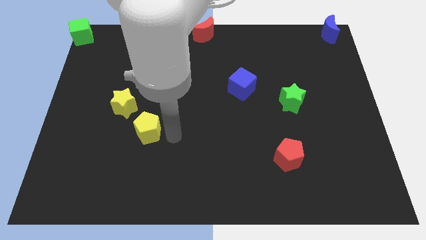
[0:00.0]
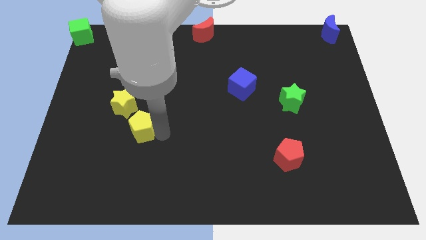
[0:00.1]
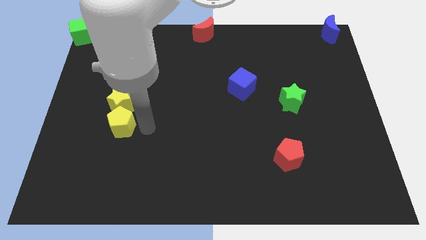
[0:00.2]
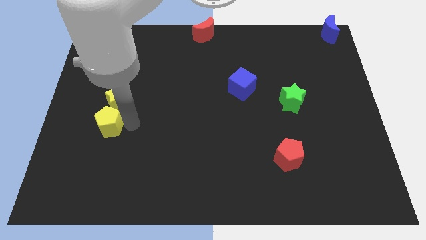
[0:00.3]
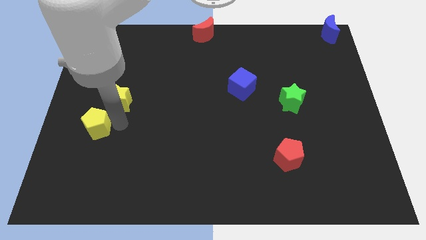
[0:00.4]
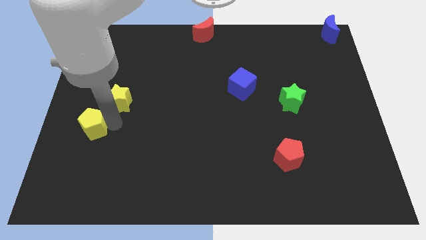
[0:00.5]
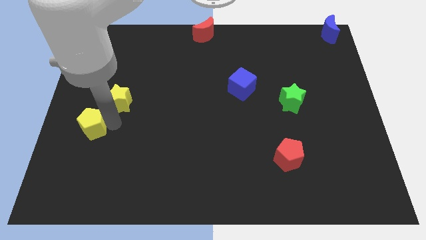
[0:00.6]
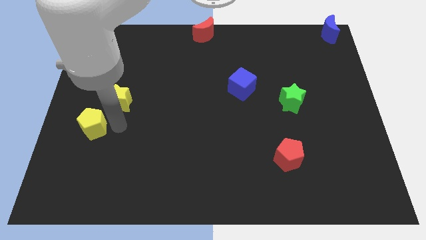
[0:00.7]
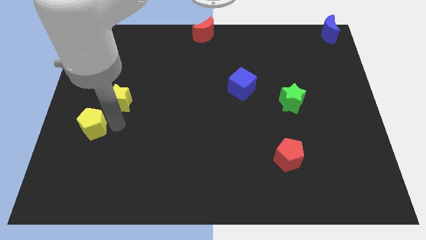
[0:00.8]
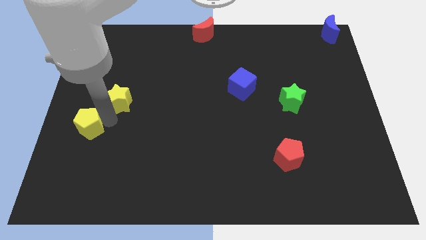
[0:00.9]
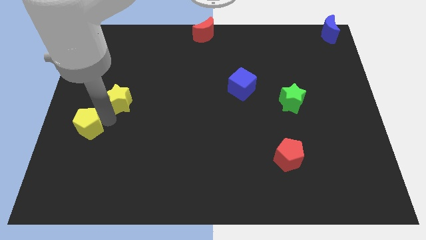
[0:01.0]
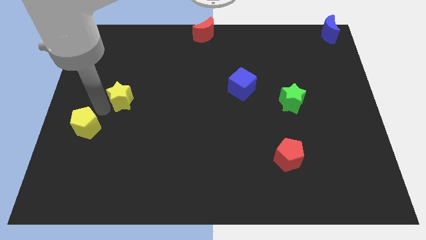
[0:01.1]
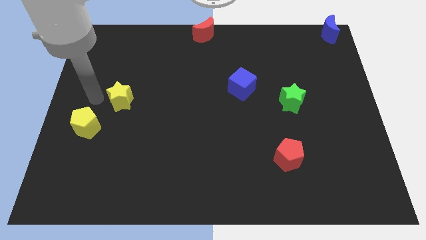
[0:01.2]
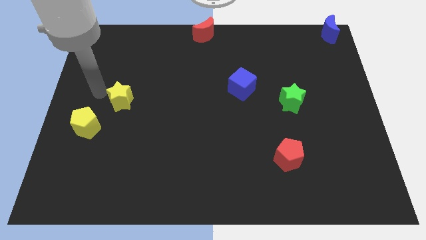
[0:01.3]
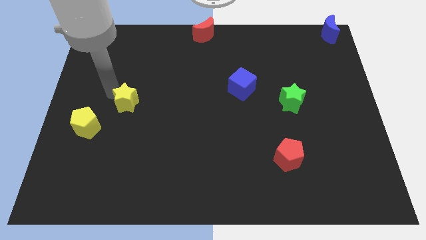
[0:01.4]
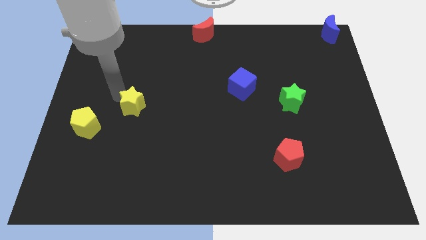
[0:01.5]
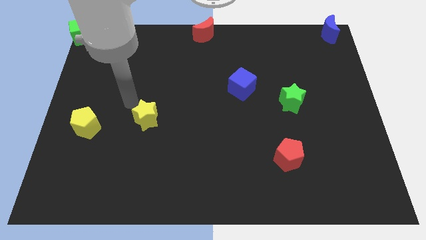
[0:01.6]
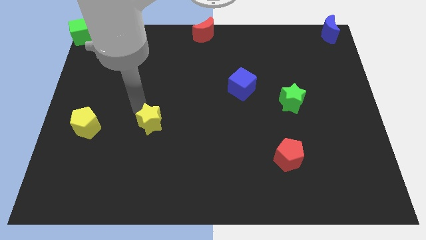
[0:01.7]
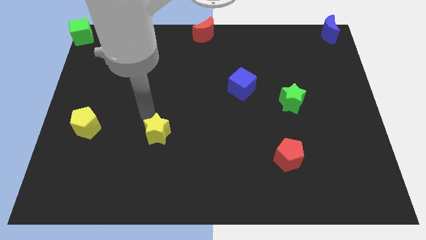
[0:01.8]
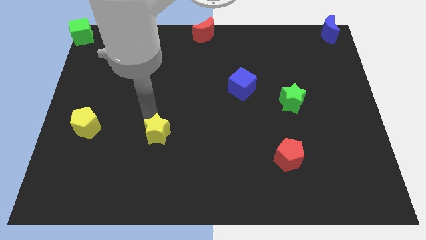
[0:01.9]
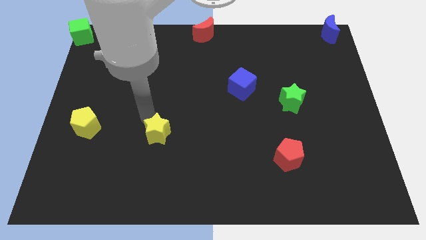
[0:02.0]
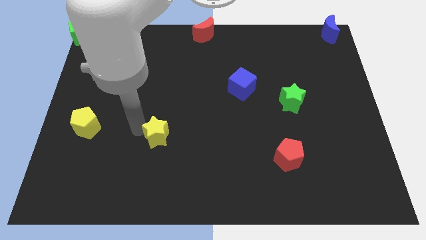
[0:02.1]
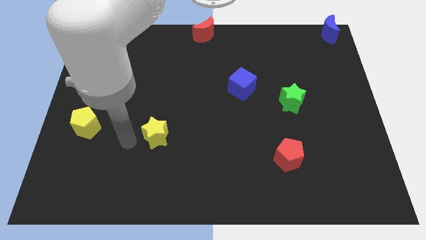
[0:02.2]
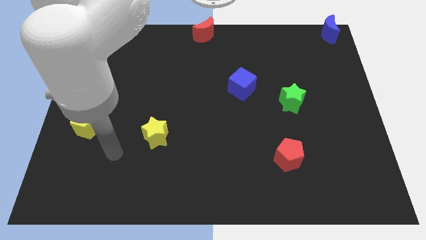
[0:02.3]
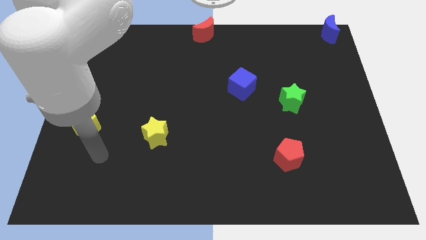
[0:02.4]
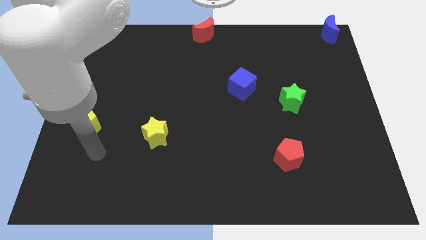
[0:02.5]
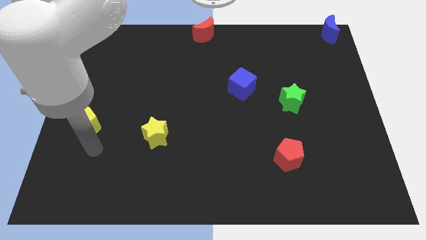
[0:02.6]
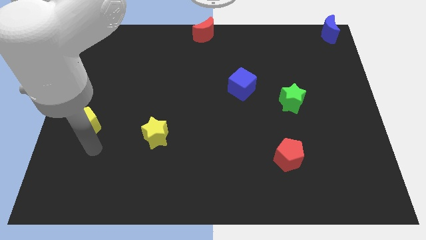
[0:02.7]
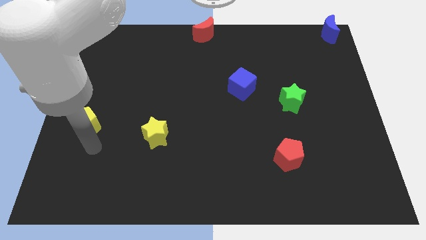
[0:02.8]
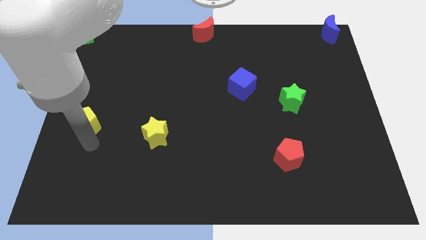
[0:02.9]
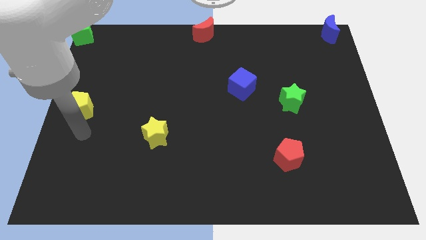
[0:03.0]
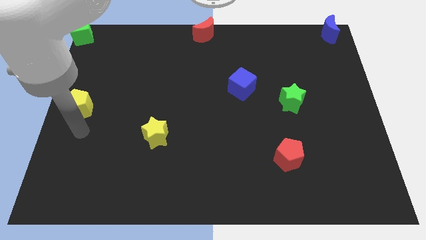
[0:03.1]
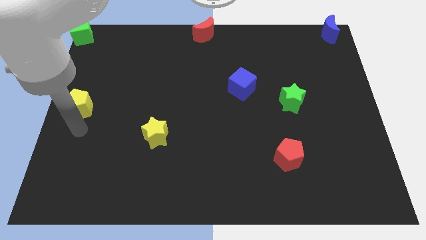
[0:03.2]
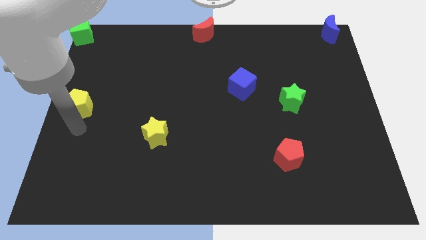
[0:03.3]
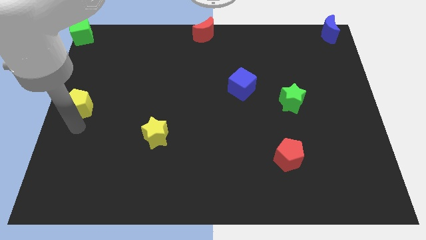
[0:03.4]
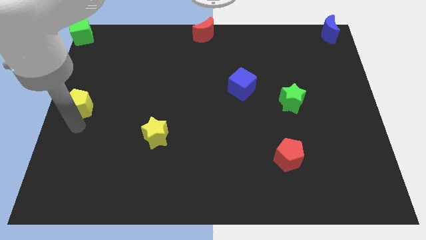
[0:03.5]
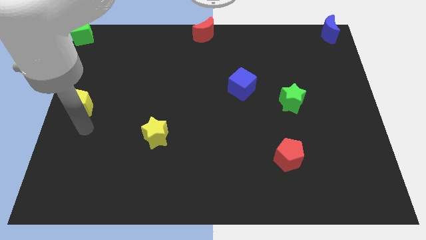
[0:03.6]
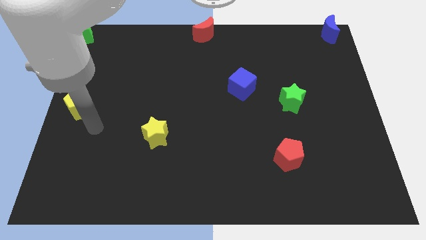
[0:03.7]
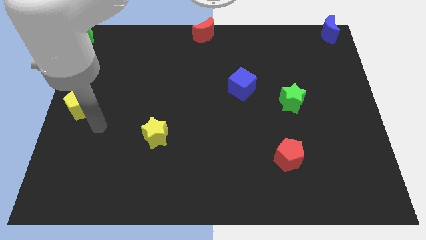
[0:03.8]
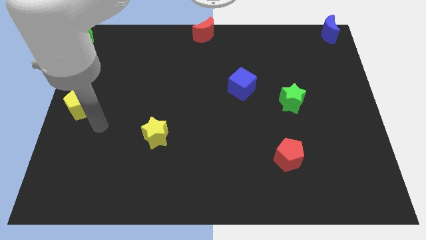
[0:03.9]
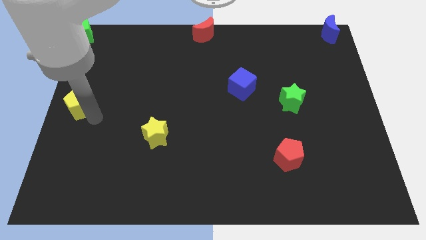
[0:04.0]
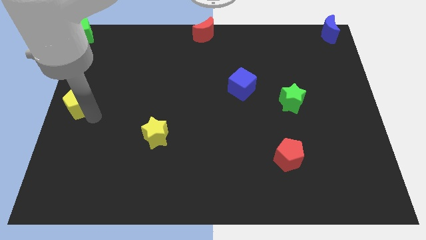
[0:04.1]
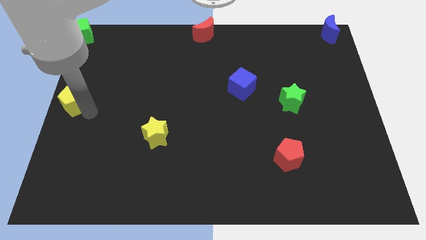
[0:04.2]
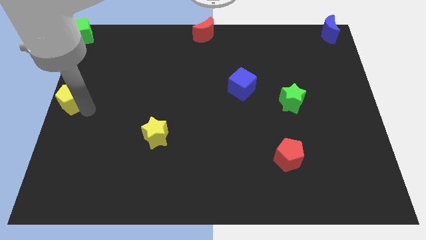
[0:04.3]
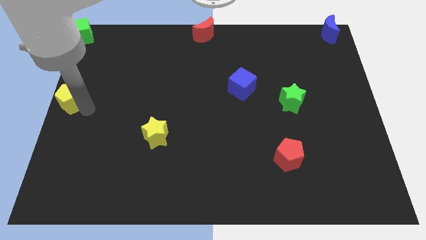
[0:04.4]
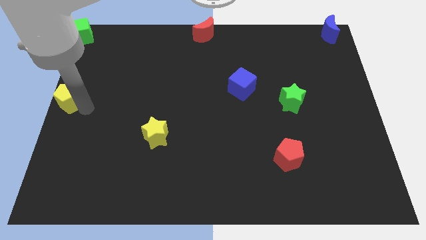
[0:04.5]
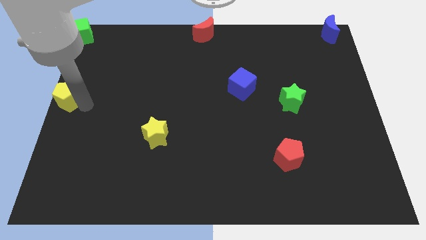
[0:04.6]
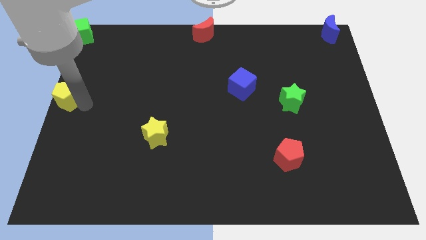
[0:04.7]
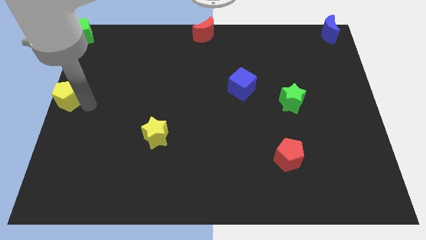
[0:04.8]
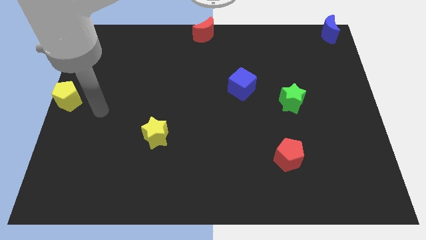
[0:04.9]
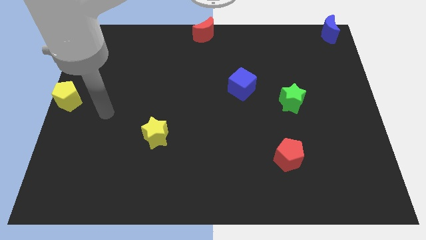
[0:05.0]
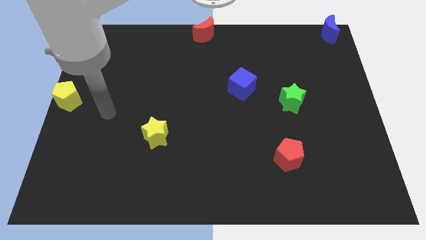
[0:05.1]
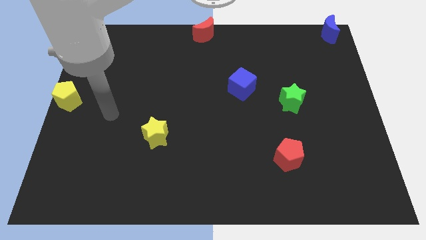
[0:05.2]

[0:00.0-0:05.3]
move pentagon to the left middle of the board

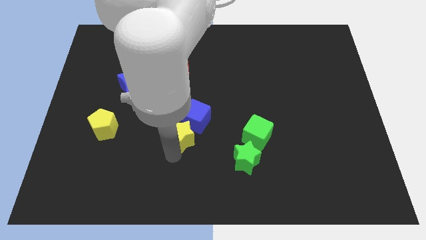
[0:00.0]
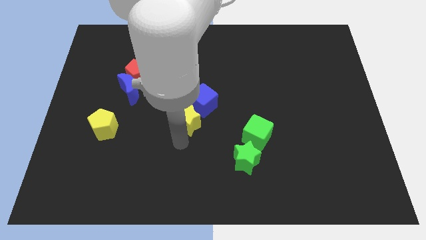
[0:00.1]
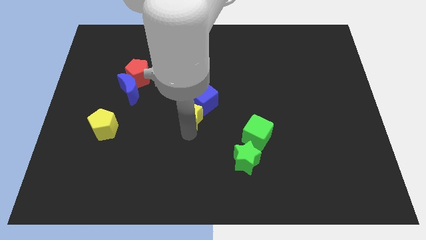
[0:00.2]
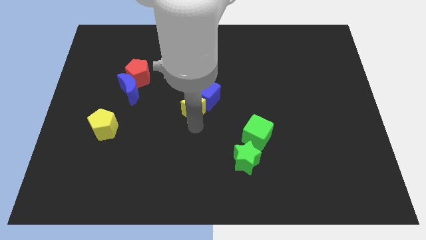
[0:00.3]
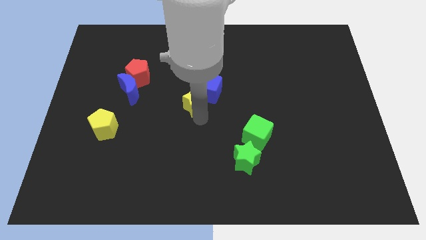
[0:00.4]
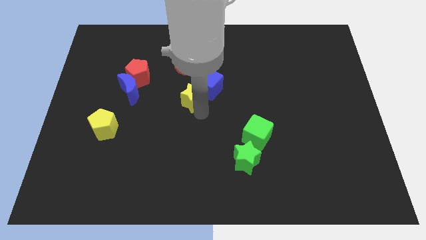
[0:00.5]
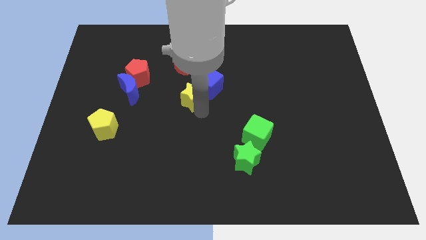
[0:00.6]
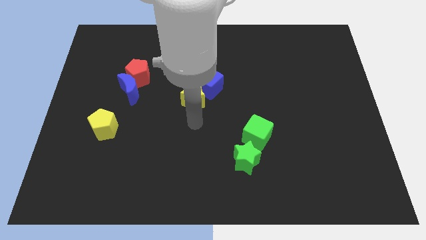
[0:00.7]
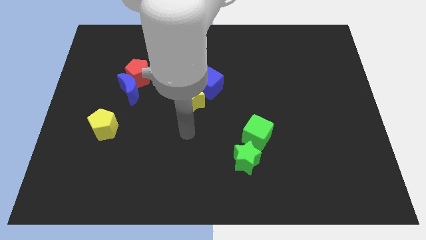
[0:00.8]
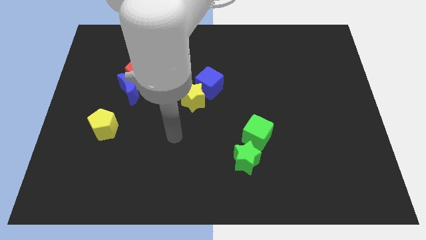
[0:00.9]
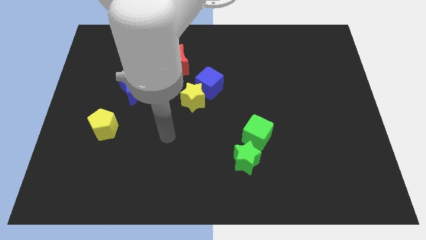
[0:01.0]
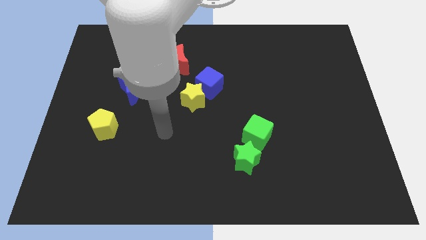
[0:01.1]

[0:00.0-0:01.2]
move the yellow star along with blue cube towards the top center of the board

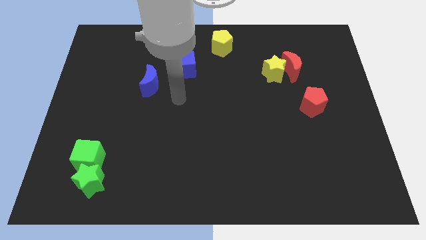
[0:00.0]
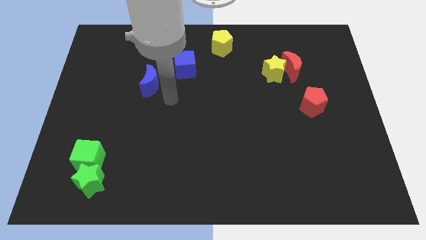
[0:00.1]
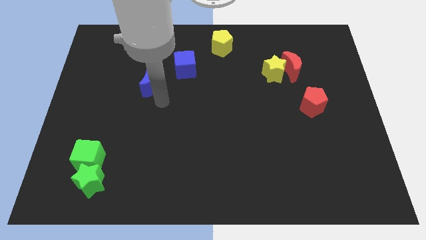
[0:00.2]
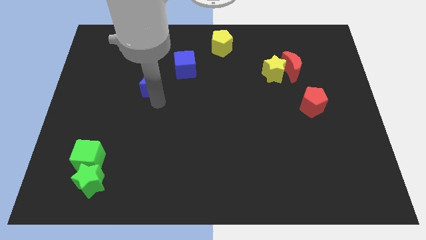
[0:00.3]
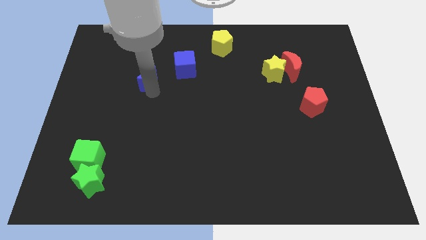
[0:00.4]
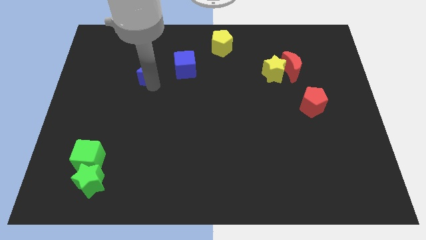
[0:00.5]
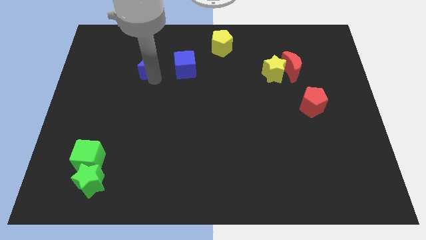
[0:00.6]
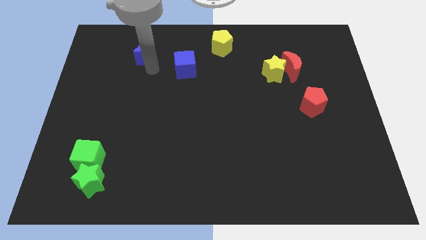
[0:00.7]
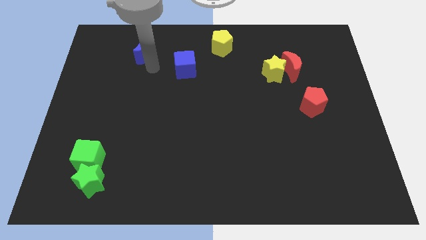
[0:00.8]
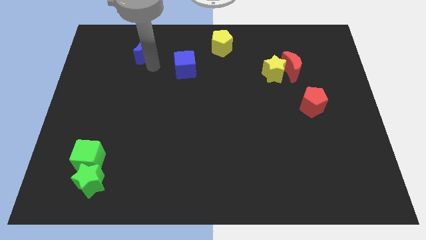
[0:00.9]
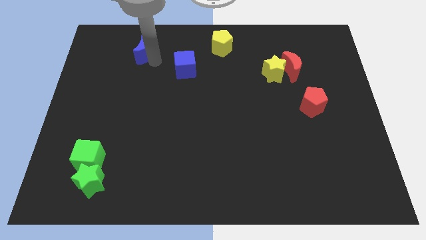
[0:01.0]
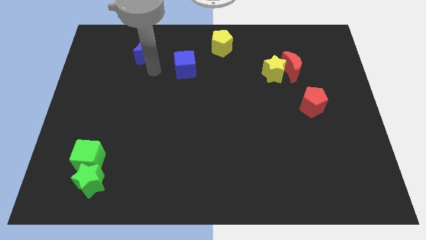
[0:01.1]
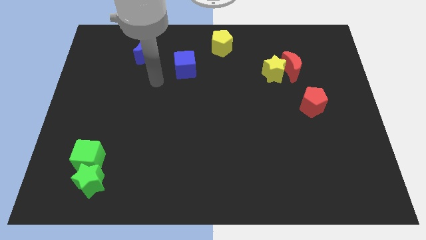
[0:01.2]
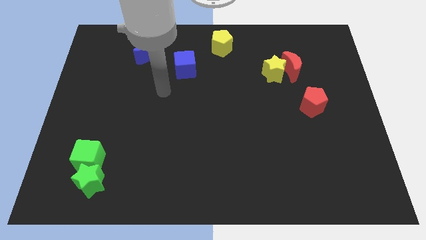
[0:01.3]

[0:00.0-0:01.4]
move the blue crescent towards the top side of the board

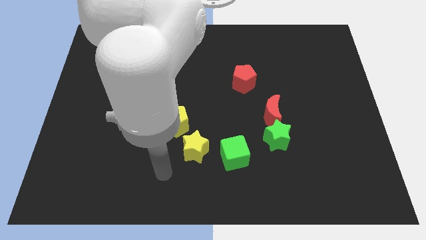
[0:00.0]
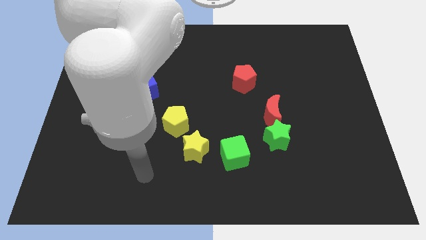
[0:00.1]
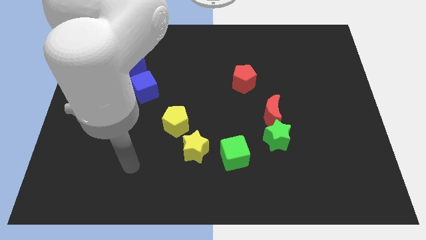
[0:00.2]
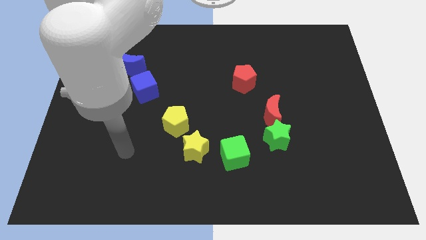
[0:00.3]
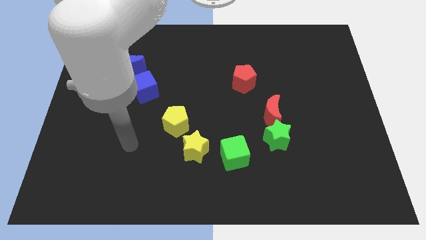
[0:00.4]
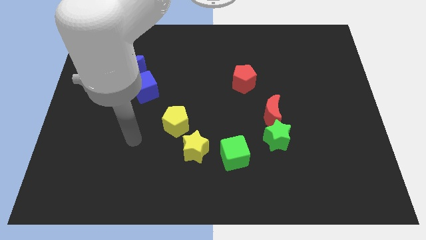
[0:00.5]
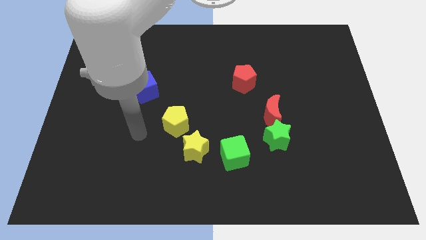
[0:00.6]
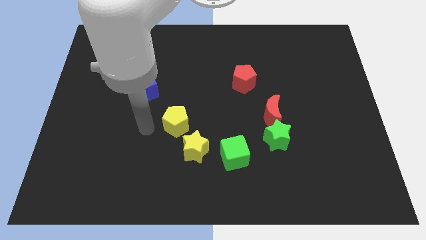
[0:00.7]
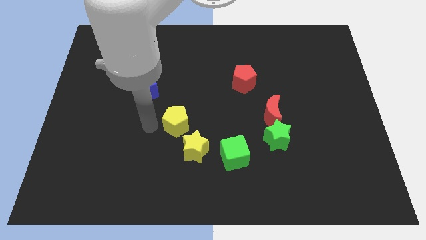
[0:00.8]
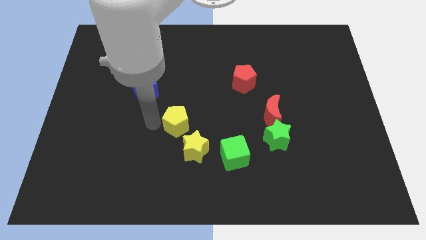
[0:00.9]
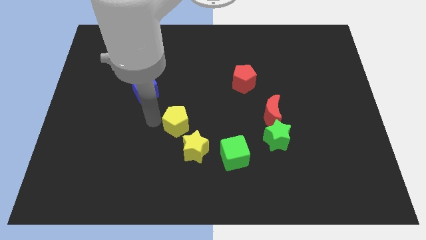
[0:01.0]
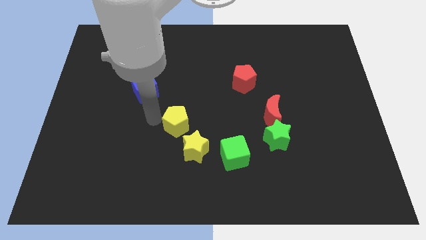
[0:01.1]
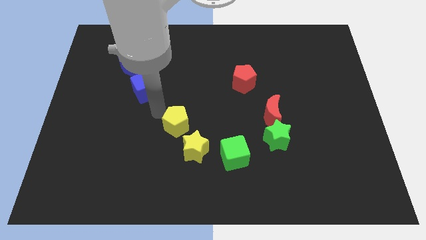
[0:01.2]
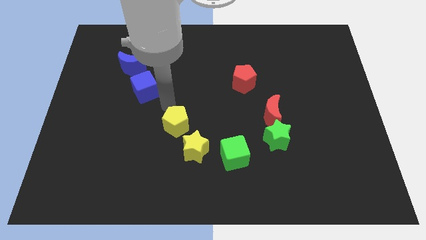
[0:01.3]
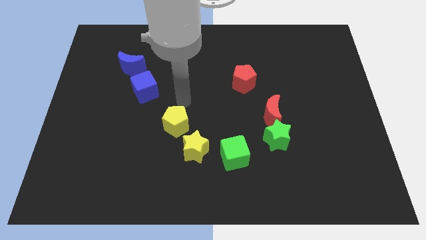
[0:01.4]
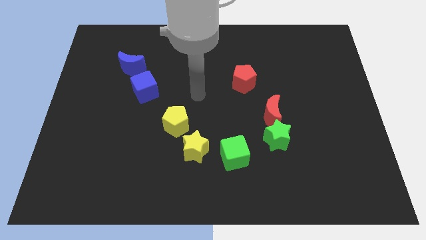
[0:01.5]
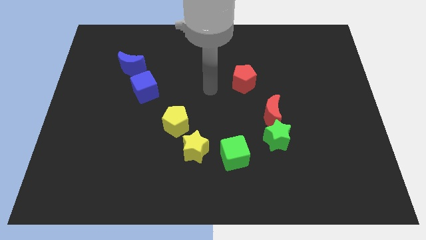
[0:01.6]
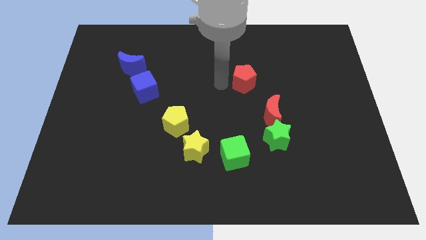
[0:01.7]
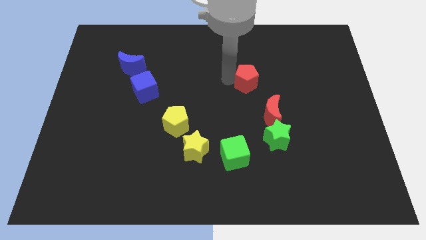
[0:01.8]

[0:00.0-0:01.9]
point the arm to the left of the red pentagon
